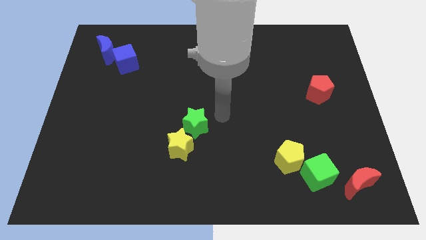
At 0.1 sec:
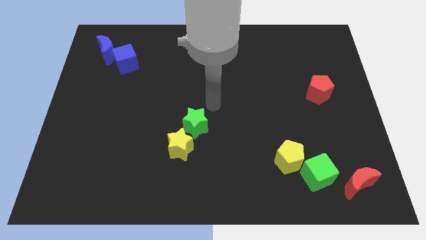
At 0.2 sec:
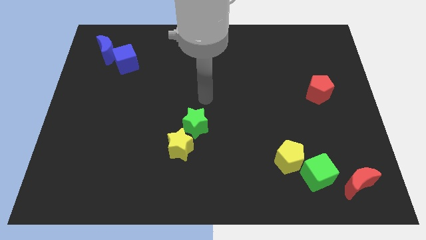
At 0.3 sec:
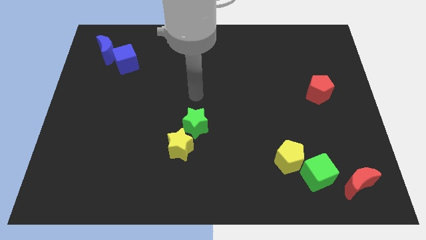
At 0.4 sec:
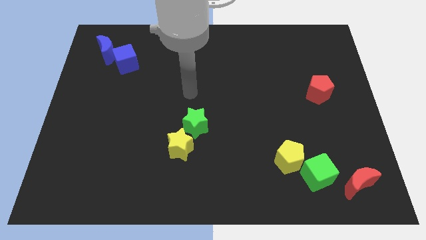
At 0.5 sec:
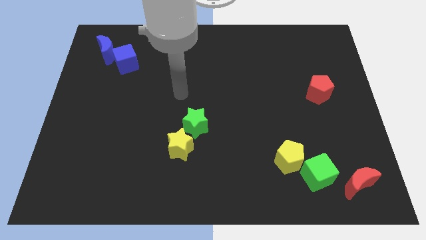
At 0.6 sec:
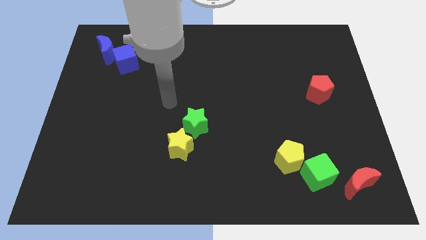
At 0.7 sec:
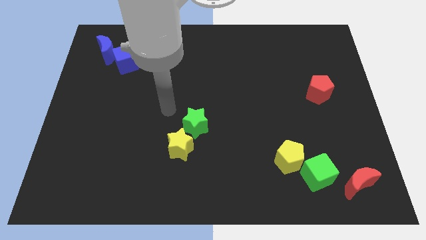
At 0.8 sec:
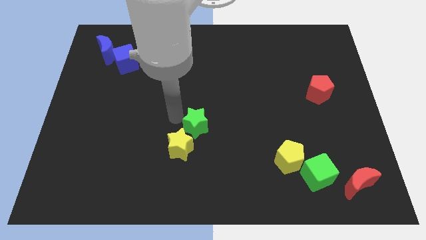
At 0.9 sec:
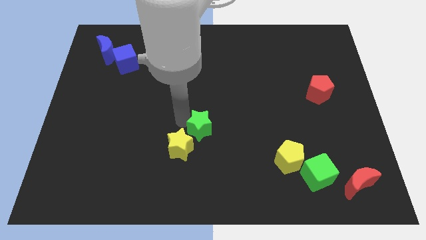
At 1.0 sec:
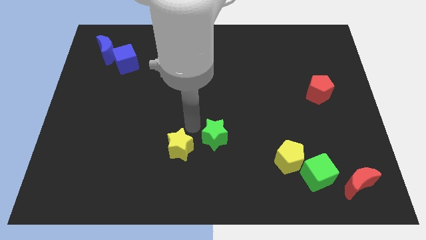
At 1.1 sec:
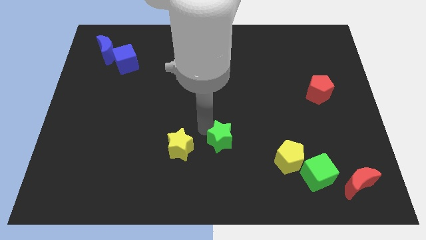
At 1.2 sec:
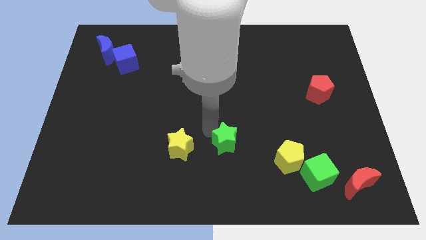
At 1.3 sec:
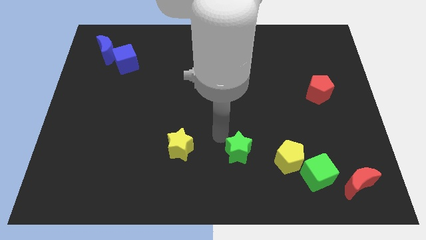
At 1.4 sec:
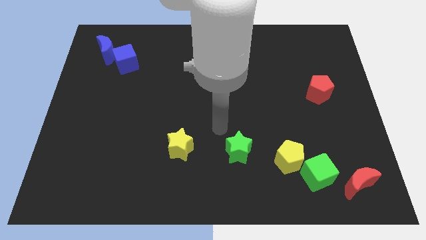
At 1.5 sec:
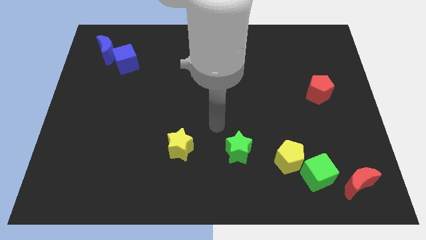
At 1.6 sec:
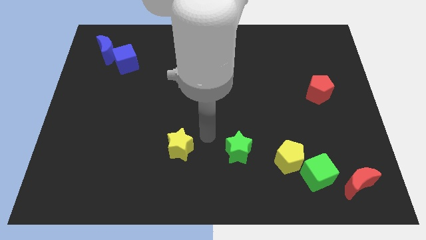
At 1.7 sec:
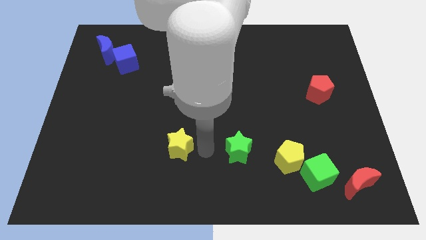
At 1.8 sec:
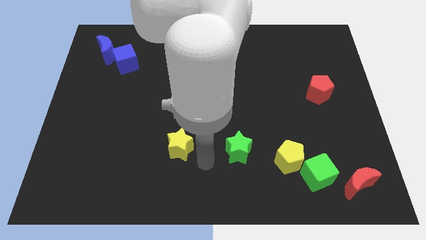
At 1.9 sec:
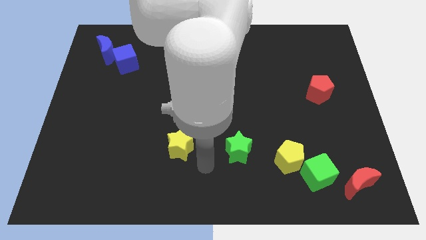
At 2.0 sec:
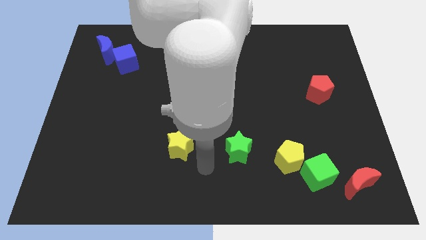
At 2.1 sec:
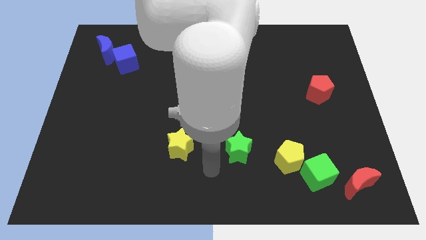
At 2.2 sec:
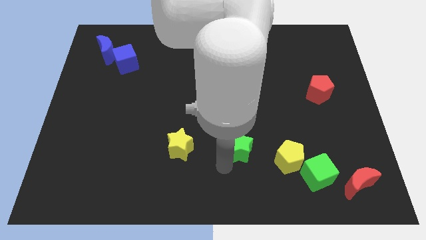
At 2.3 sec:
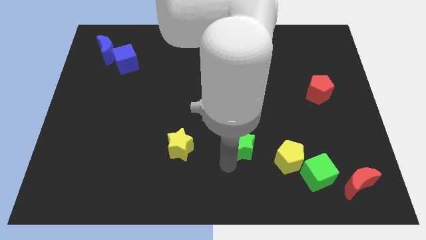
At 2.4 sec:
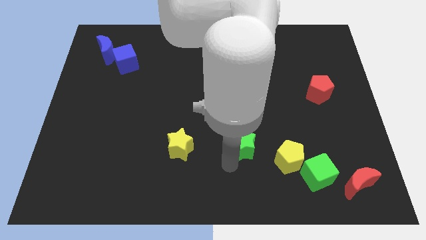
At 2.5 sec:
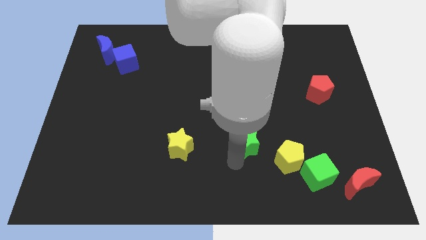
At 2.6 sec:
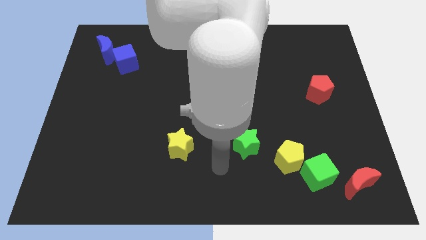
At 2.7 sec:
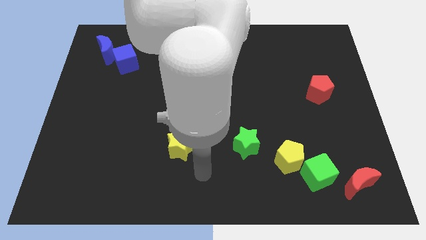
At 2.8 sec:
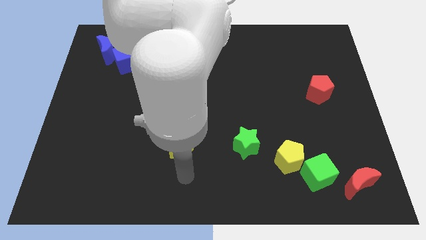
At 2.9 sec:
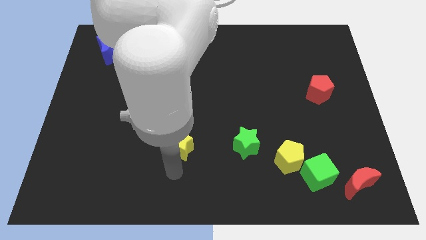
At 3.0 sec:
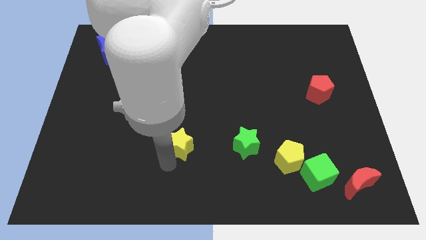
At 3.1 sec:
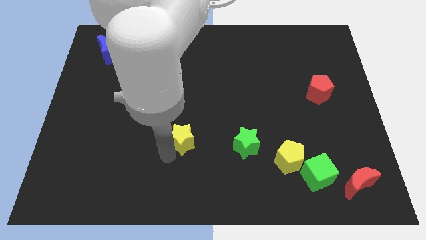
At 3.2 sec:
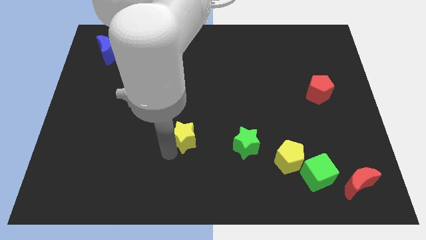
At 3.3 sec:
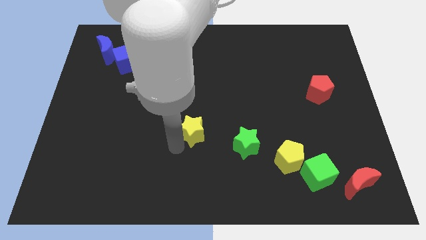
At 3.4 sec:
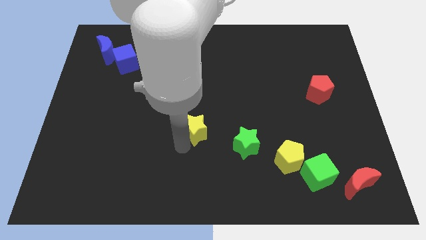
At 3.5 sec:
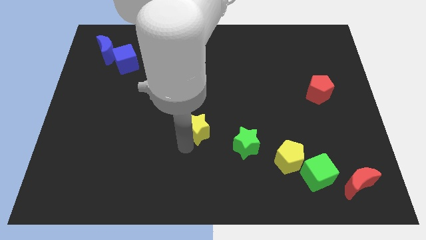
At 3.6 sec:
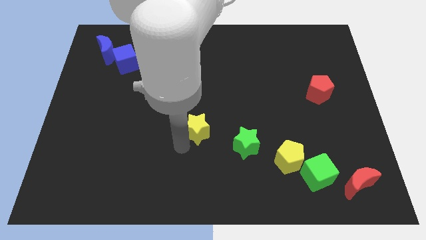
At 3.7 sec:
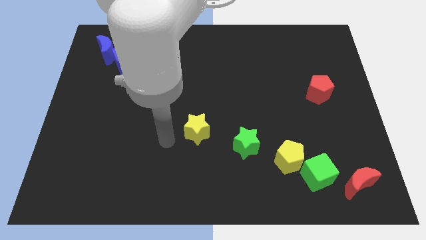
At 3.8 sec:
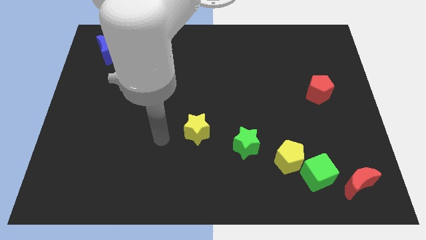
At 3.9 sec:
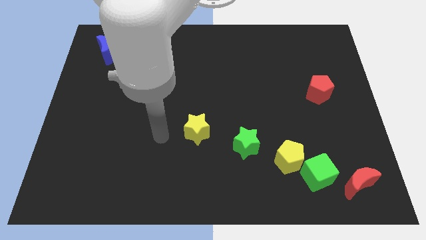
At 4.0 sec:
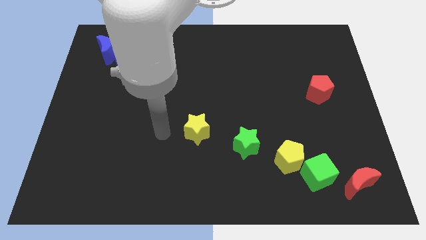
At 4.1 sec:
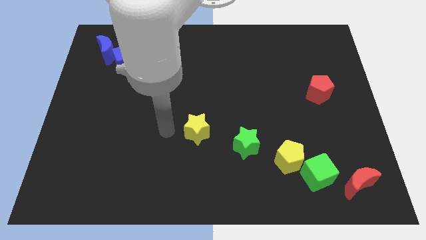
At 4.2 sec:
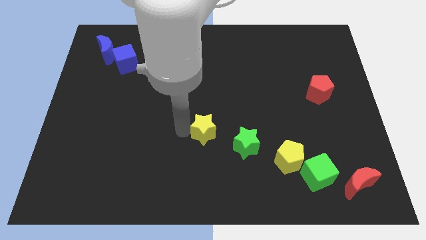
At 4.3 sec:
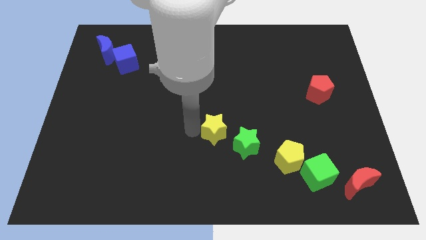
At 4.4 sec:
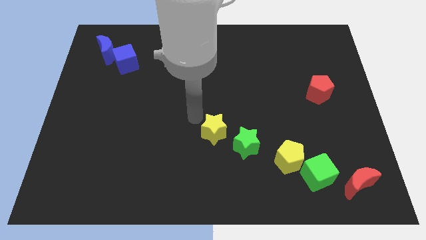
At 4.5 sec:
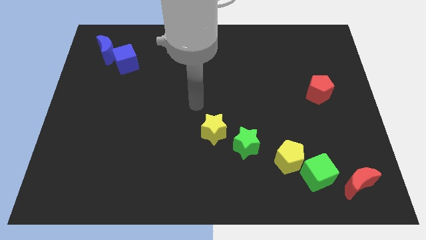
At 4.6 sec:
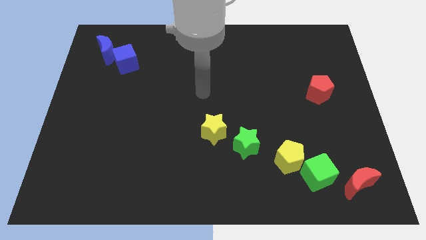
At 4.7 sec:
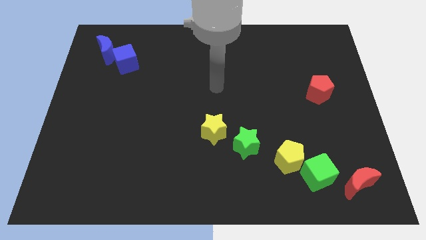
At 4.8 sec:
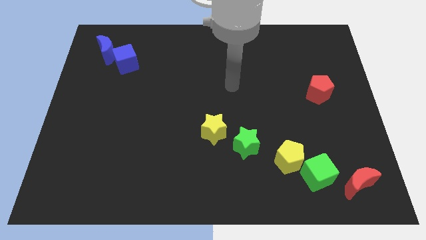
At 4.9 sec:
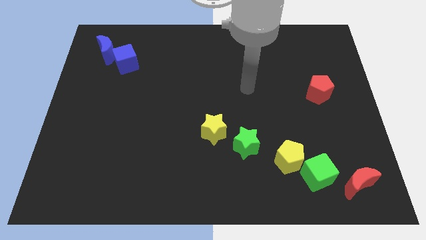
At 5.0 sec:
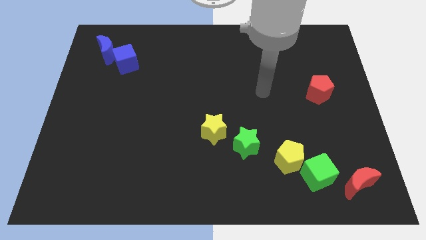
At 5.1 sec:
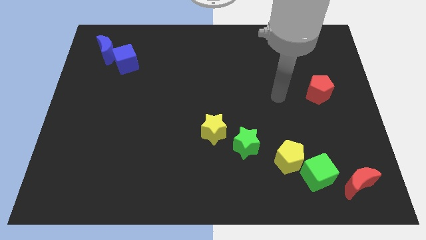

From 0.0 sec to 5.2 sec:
move the yellow star to the center of the board

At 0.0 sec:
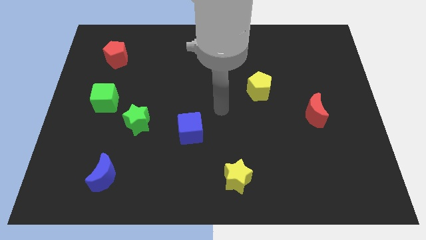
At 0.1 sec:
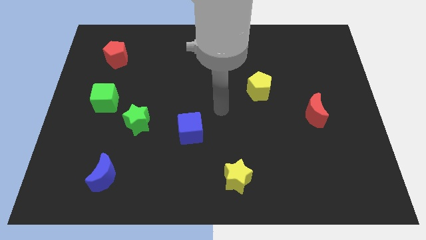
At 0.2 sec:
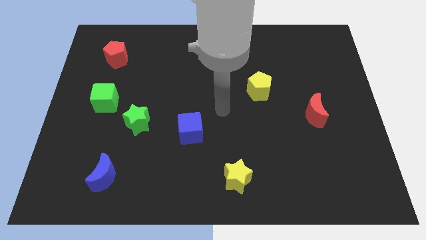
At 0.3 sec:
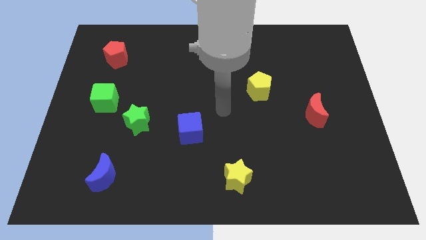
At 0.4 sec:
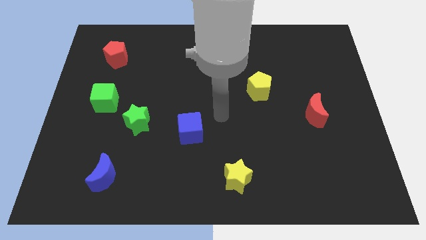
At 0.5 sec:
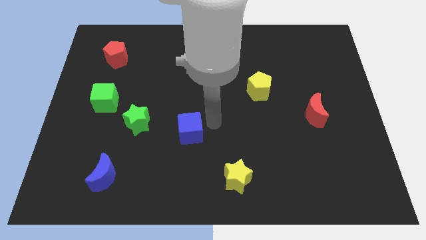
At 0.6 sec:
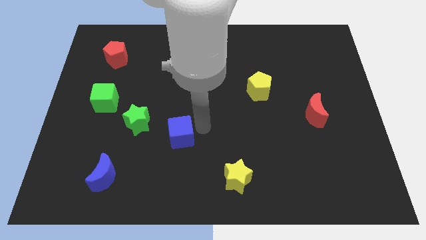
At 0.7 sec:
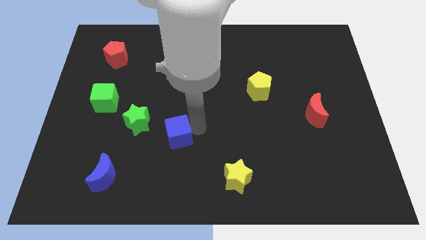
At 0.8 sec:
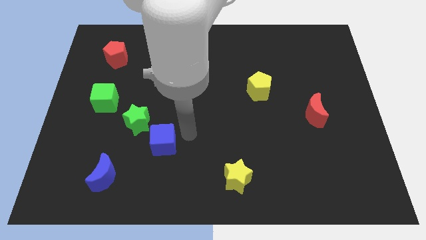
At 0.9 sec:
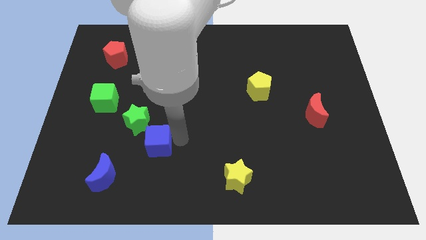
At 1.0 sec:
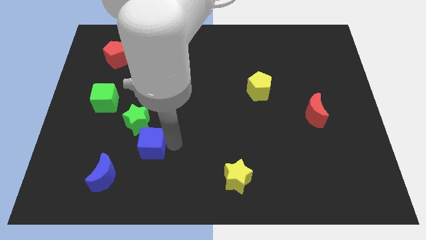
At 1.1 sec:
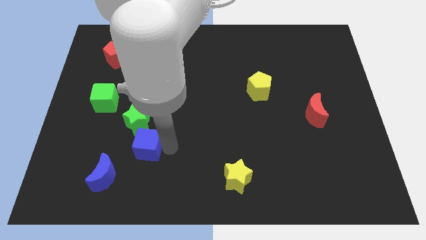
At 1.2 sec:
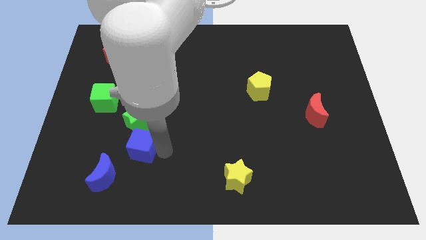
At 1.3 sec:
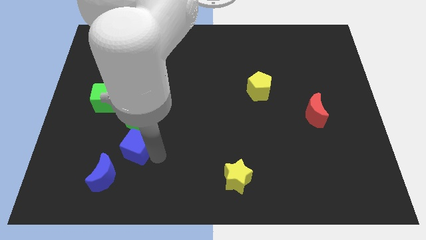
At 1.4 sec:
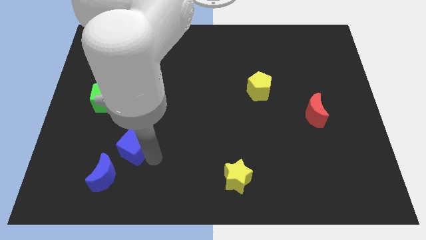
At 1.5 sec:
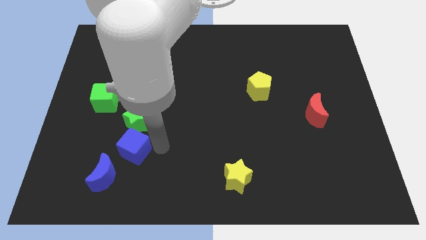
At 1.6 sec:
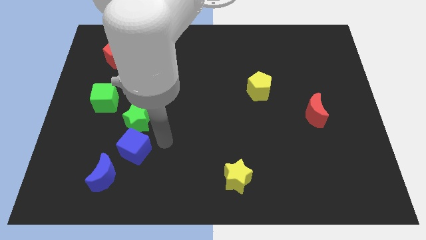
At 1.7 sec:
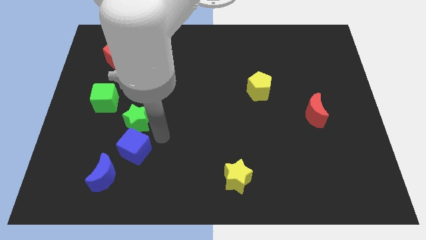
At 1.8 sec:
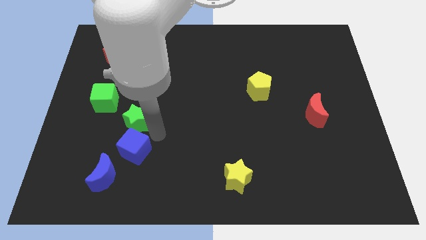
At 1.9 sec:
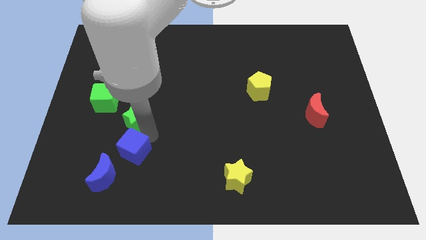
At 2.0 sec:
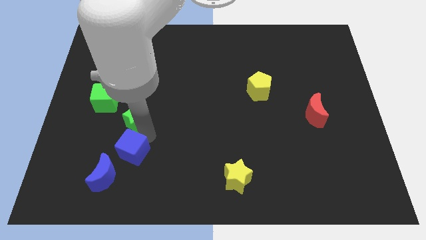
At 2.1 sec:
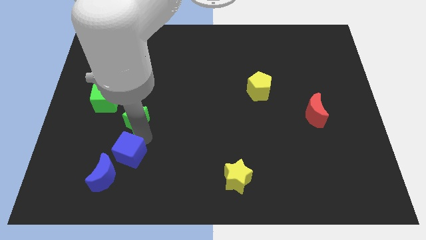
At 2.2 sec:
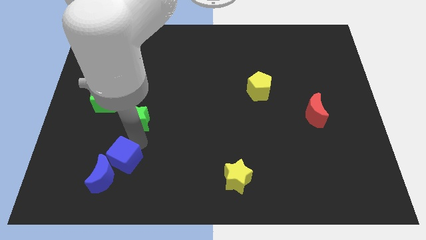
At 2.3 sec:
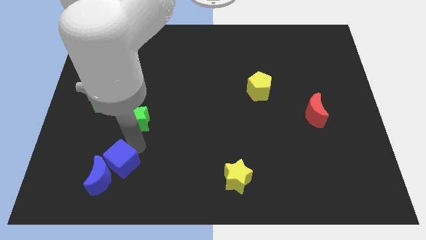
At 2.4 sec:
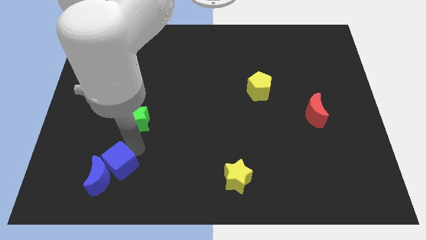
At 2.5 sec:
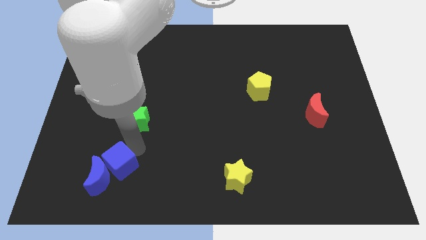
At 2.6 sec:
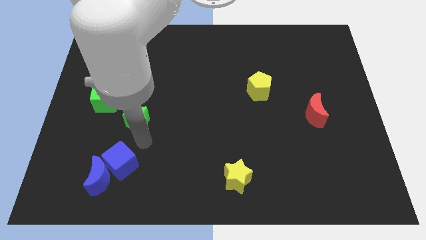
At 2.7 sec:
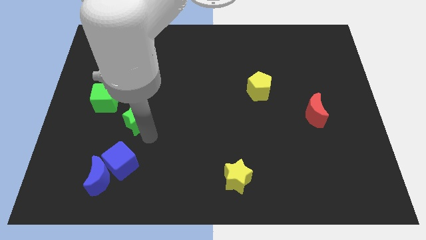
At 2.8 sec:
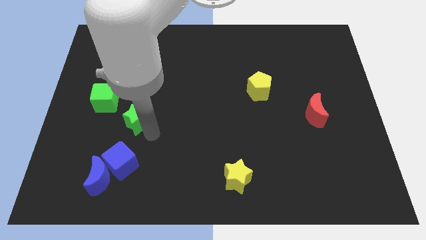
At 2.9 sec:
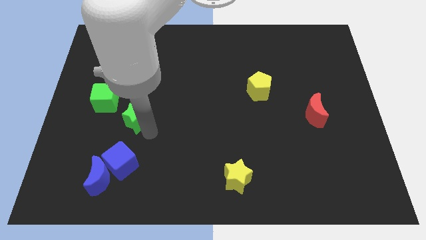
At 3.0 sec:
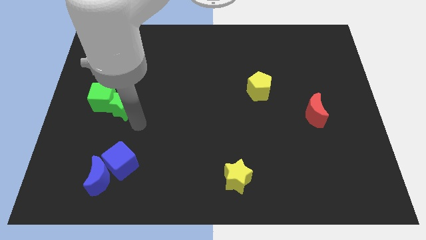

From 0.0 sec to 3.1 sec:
push the blue cube into the blue moon

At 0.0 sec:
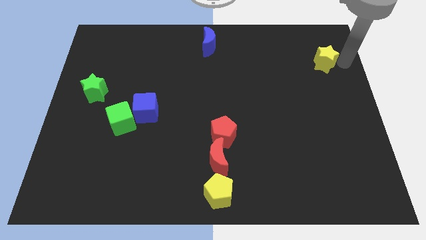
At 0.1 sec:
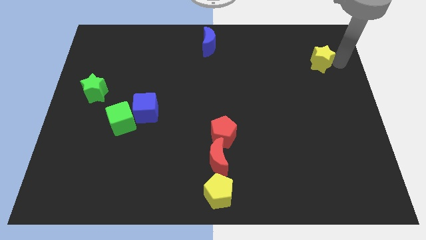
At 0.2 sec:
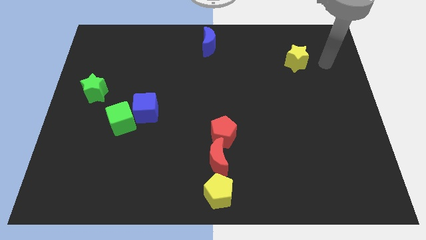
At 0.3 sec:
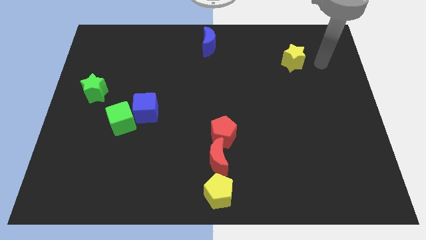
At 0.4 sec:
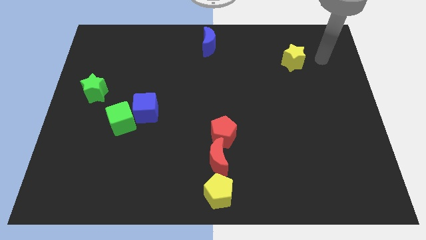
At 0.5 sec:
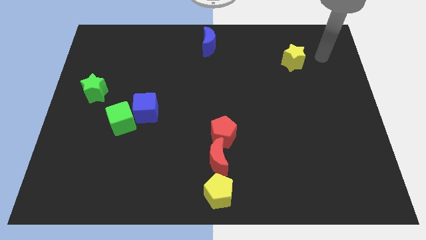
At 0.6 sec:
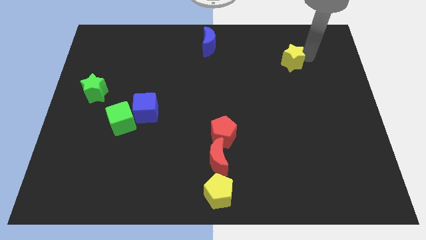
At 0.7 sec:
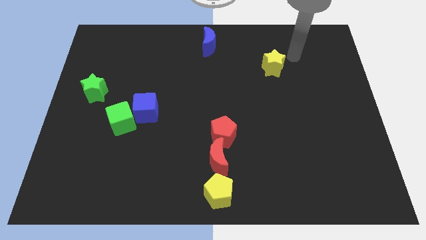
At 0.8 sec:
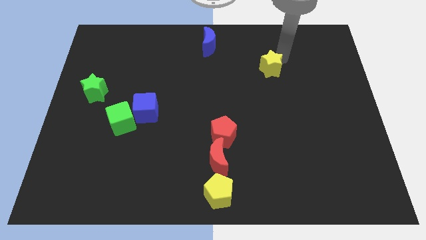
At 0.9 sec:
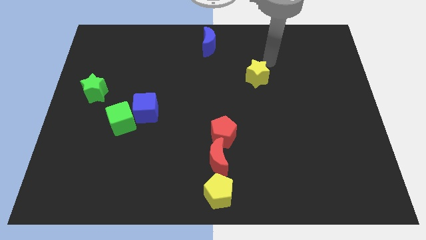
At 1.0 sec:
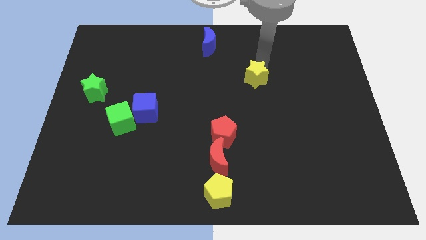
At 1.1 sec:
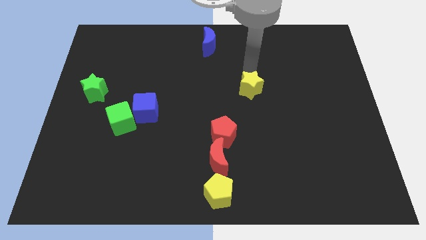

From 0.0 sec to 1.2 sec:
drag yellow star to the left
